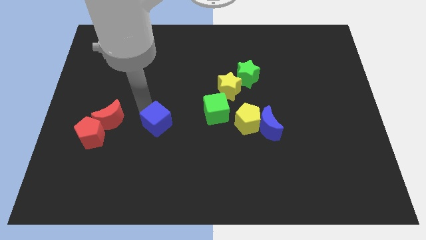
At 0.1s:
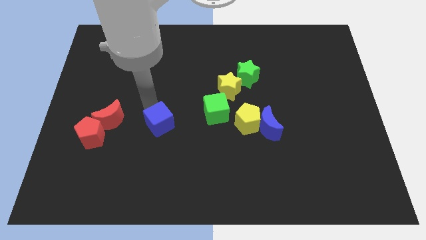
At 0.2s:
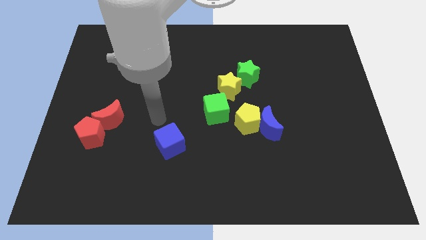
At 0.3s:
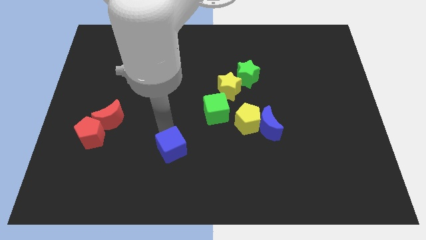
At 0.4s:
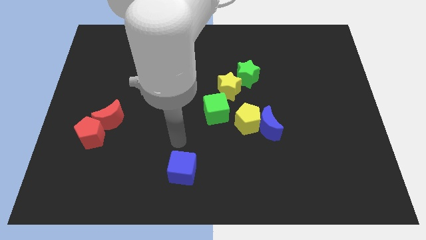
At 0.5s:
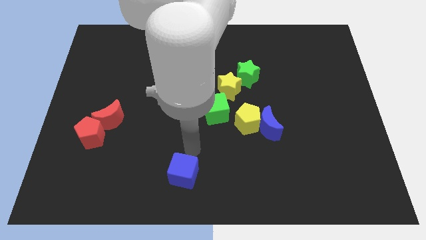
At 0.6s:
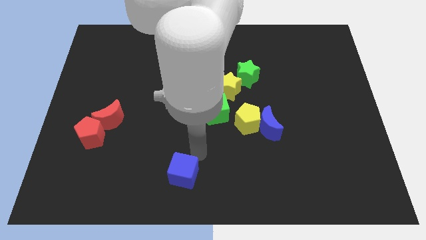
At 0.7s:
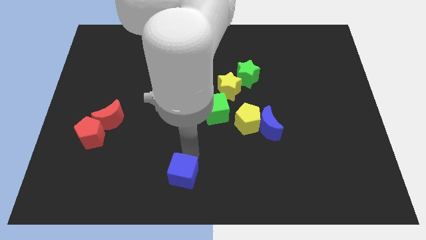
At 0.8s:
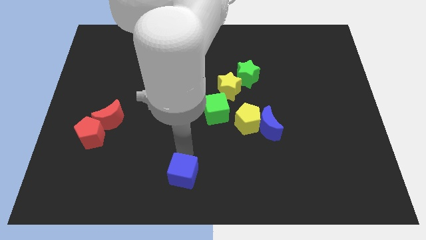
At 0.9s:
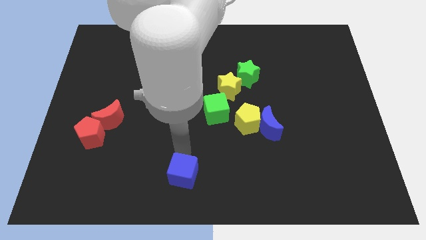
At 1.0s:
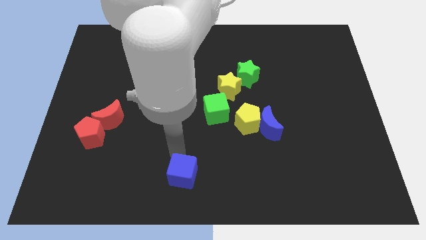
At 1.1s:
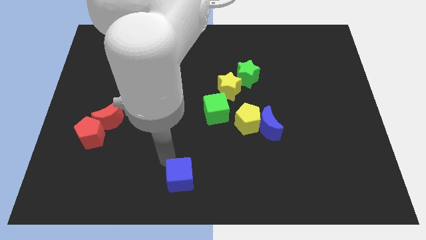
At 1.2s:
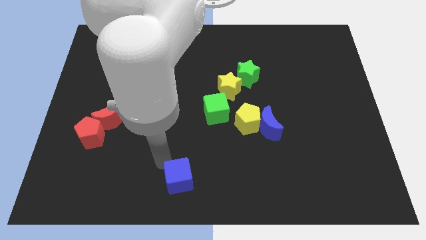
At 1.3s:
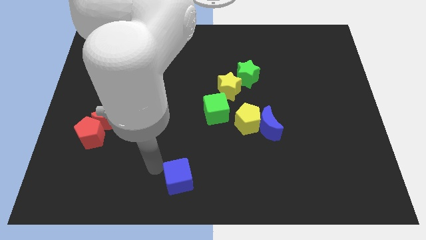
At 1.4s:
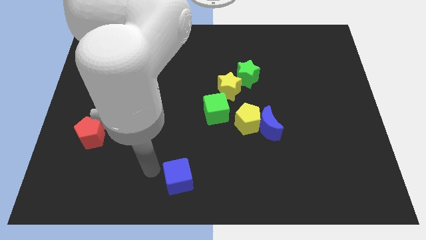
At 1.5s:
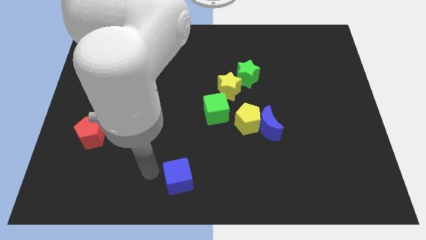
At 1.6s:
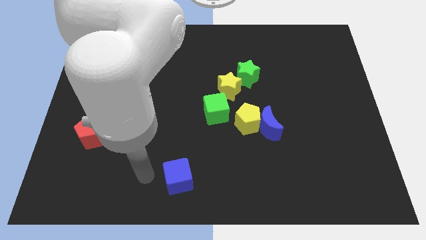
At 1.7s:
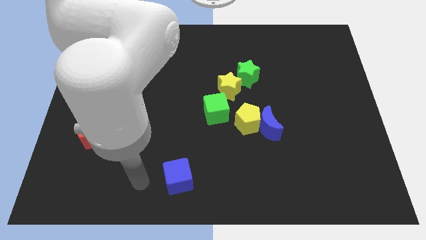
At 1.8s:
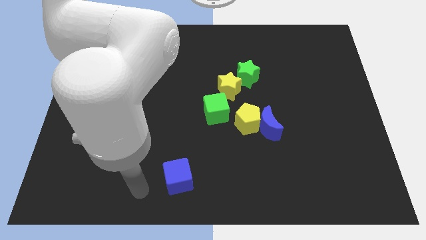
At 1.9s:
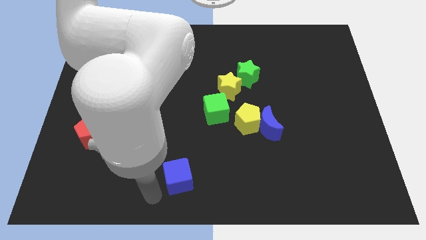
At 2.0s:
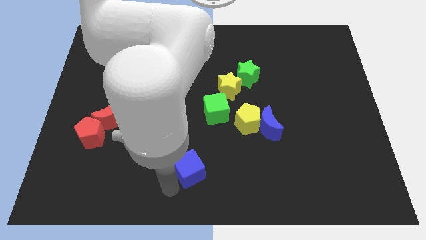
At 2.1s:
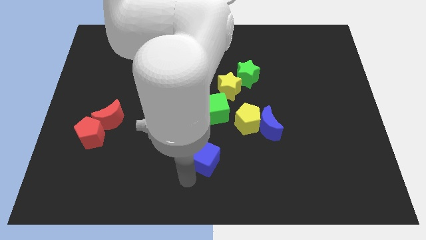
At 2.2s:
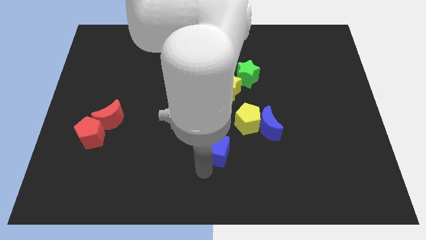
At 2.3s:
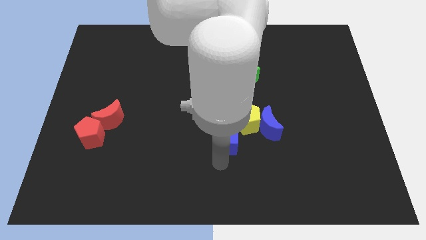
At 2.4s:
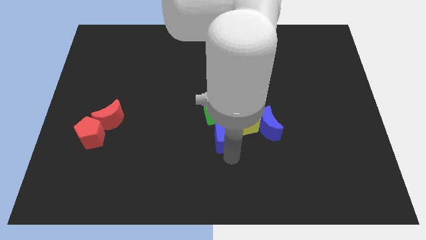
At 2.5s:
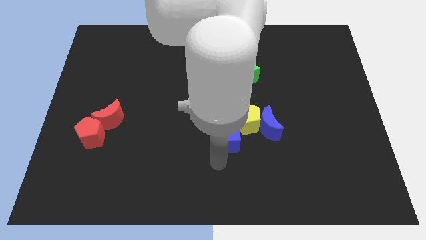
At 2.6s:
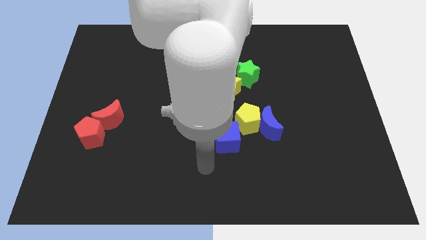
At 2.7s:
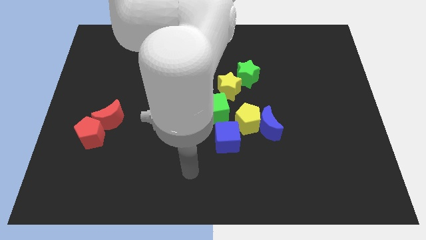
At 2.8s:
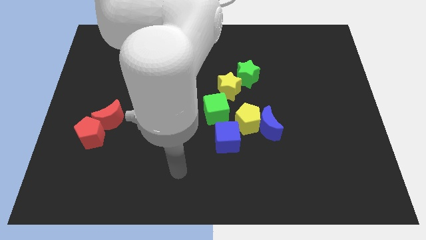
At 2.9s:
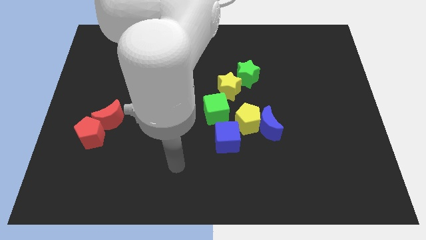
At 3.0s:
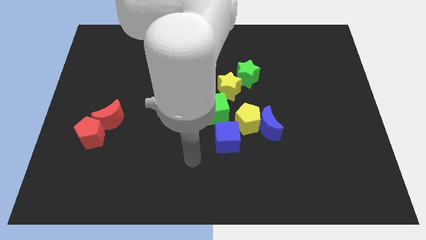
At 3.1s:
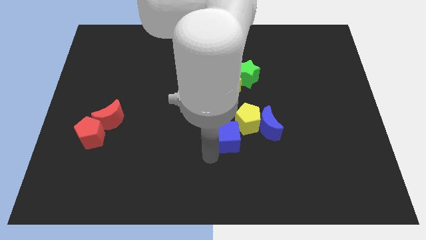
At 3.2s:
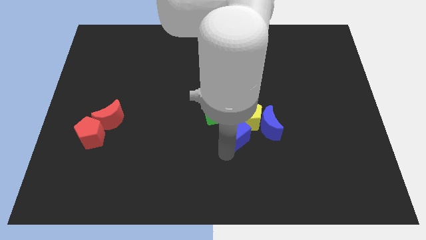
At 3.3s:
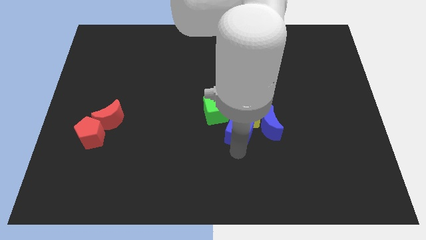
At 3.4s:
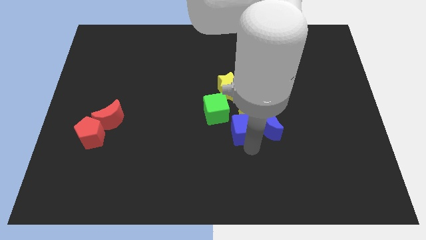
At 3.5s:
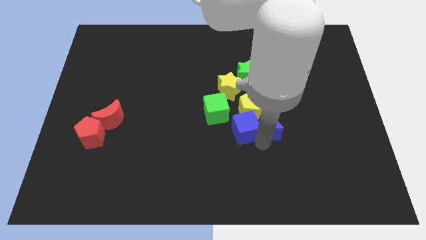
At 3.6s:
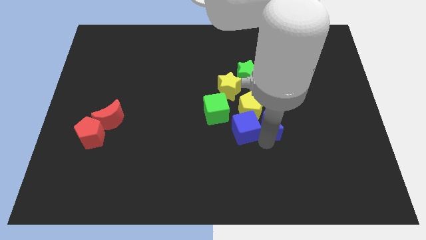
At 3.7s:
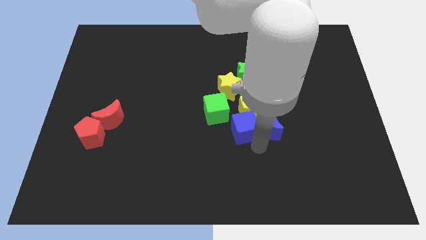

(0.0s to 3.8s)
push the blue cube into yellow pentagon

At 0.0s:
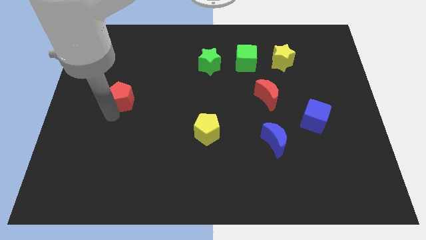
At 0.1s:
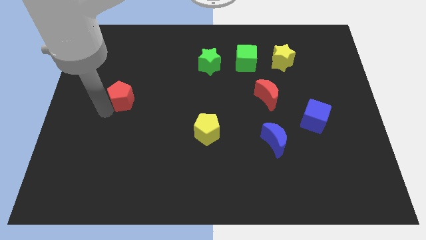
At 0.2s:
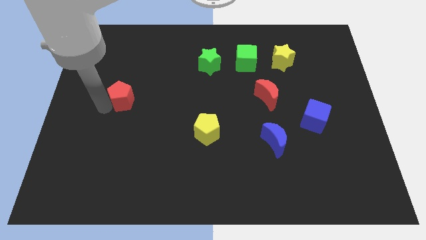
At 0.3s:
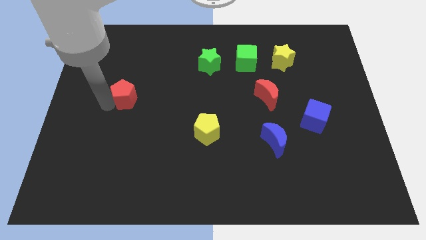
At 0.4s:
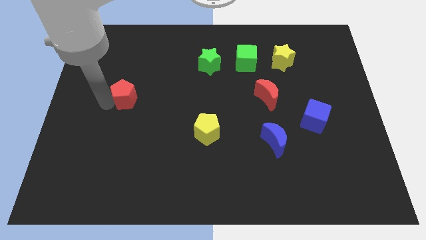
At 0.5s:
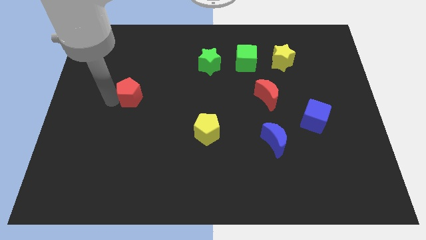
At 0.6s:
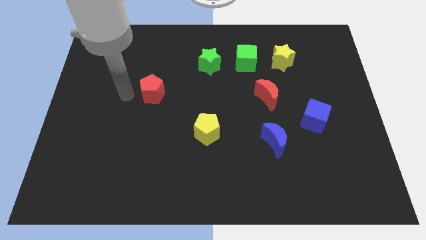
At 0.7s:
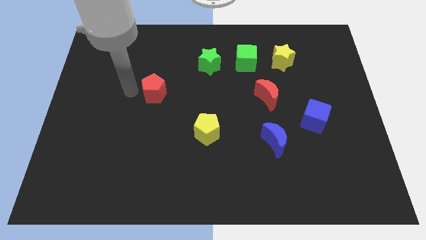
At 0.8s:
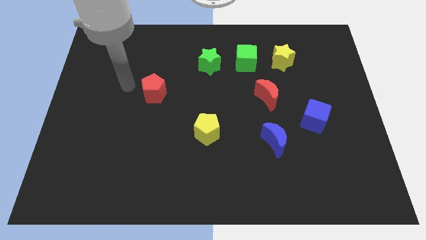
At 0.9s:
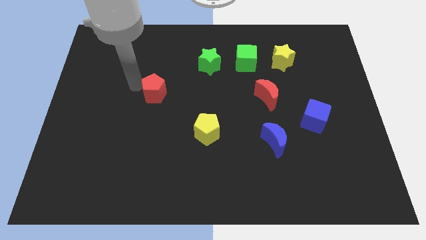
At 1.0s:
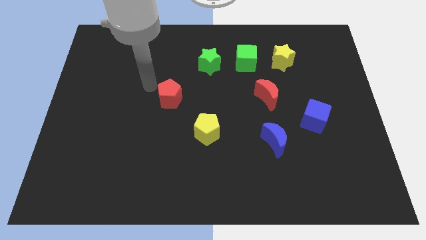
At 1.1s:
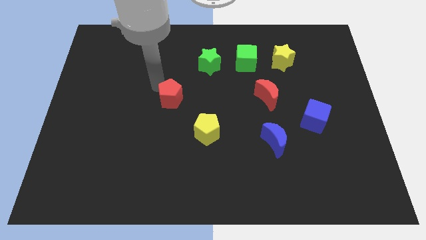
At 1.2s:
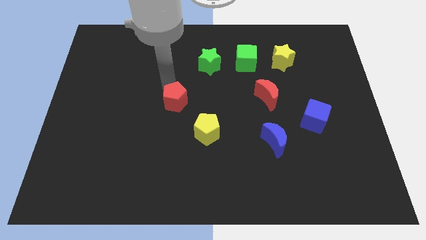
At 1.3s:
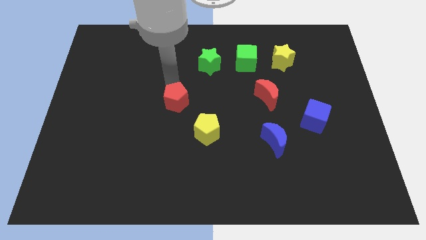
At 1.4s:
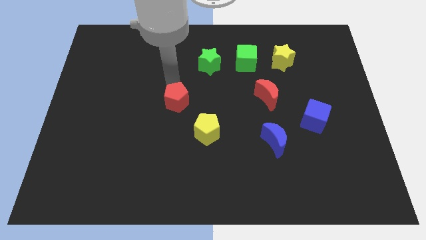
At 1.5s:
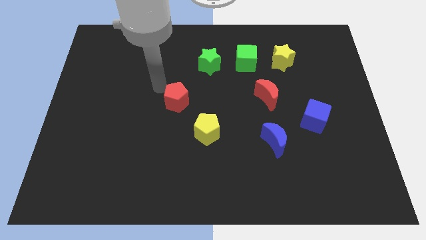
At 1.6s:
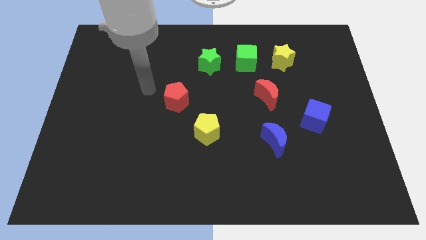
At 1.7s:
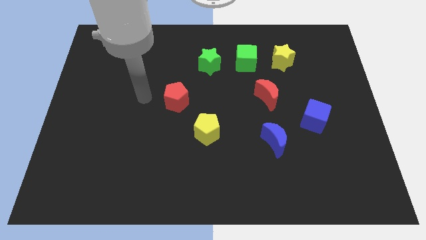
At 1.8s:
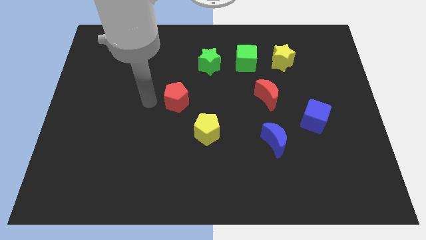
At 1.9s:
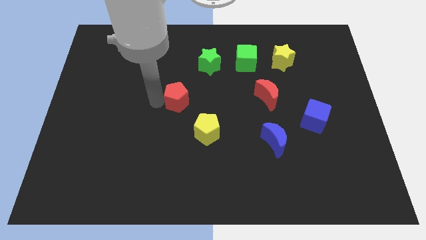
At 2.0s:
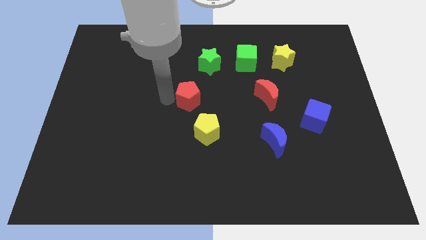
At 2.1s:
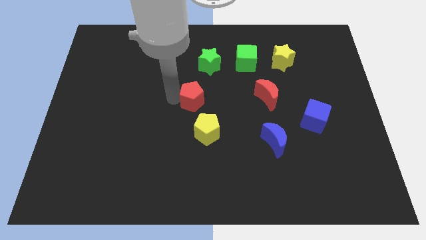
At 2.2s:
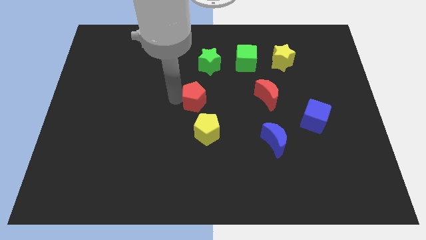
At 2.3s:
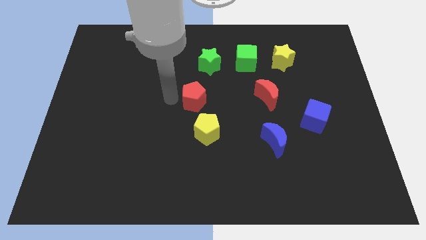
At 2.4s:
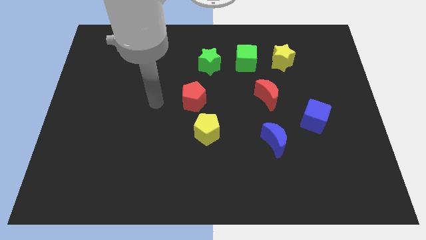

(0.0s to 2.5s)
put the red pentagon diagonally to green cube

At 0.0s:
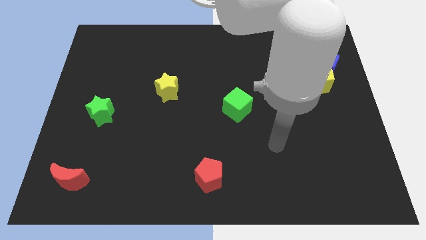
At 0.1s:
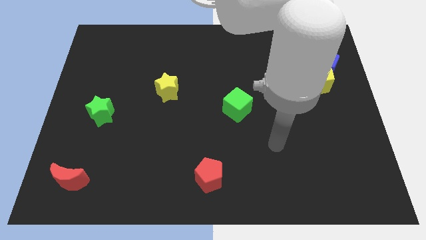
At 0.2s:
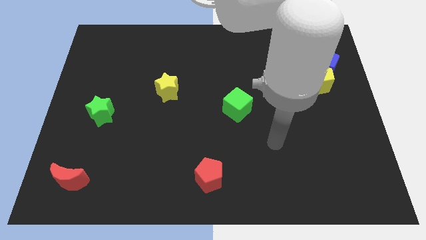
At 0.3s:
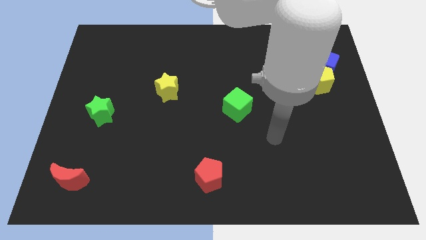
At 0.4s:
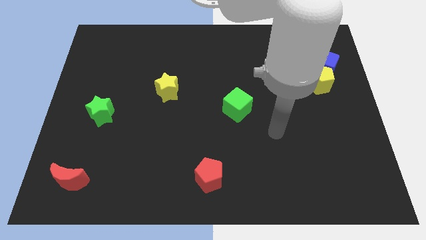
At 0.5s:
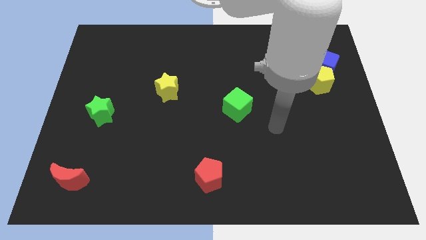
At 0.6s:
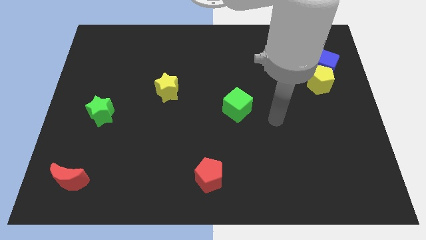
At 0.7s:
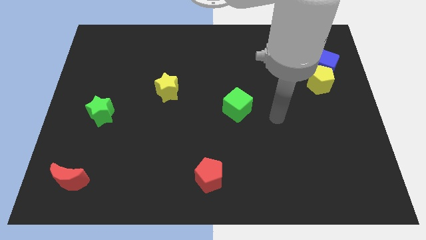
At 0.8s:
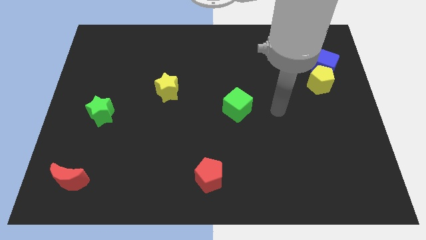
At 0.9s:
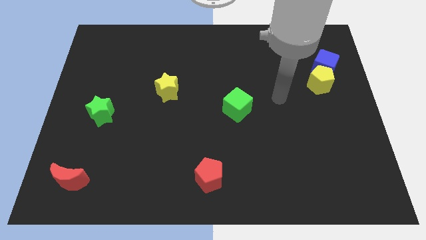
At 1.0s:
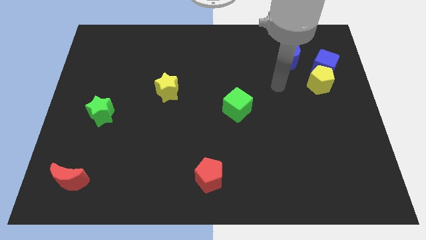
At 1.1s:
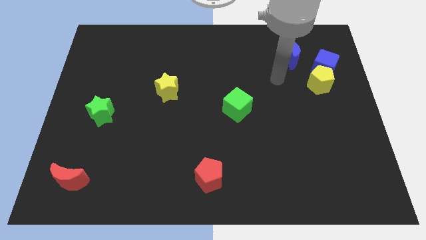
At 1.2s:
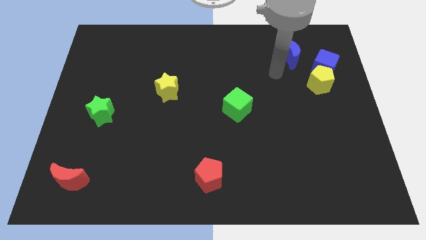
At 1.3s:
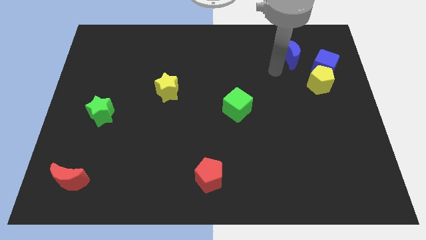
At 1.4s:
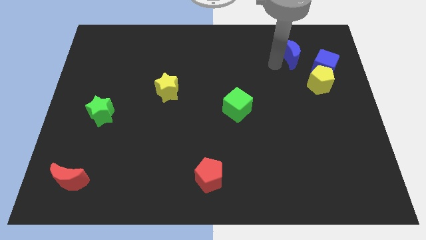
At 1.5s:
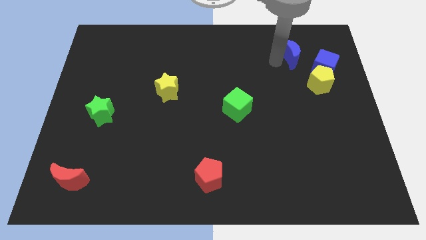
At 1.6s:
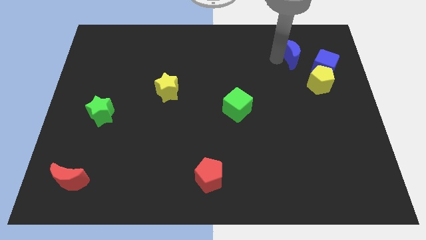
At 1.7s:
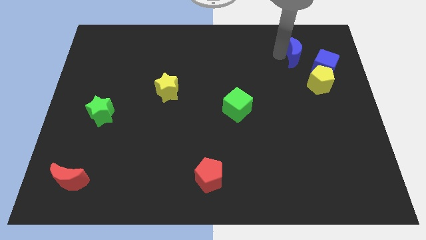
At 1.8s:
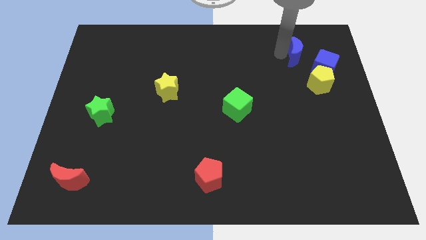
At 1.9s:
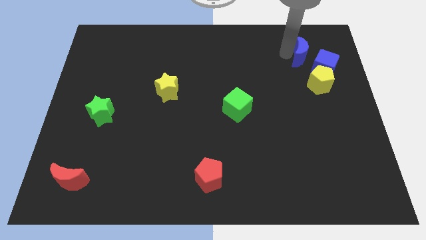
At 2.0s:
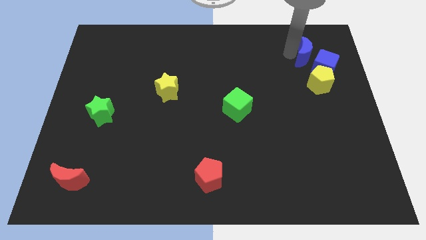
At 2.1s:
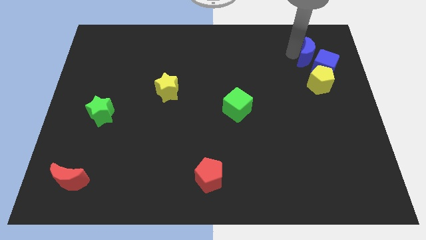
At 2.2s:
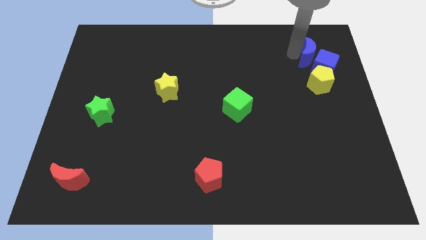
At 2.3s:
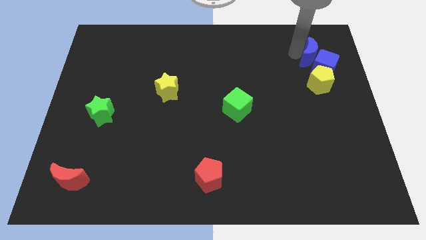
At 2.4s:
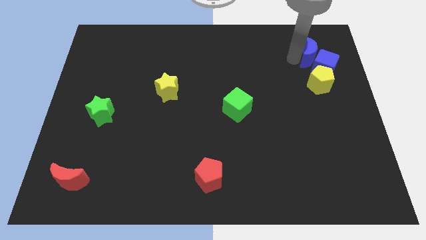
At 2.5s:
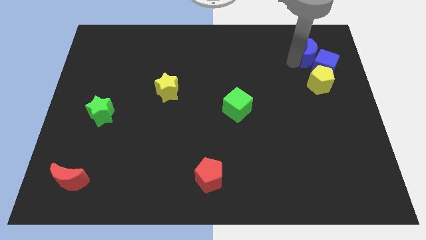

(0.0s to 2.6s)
move blue moon to the left of blue cube
